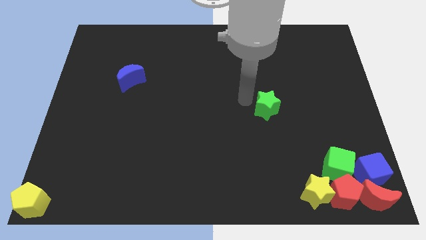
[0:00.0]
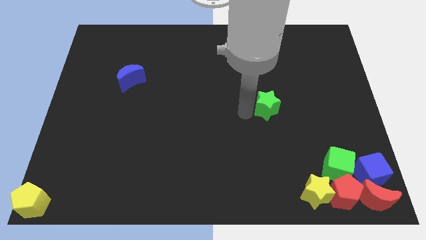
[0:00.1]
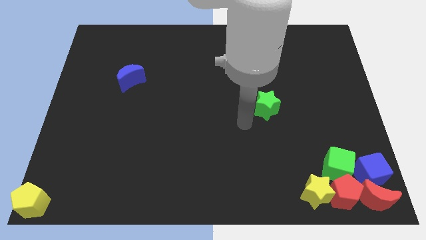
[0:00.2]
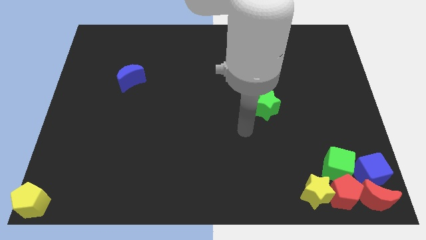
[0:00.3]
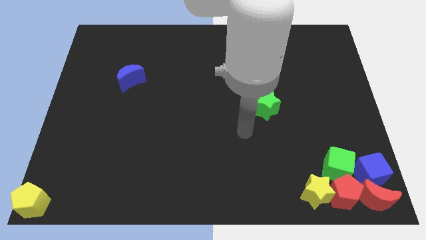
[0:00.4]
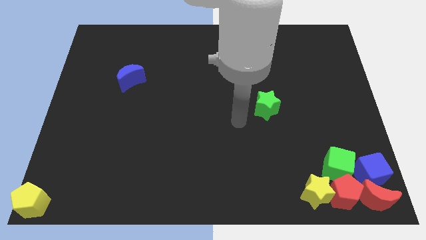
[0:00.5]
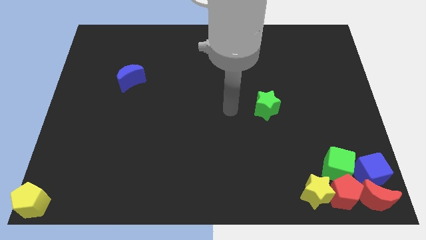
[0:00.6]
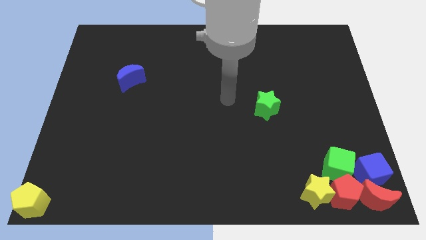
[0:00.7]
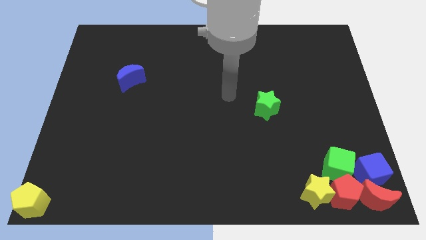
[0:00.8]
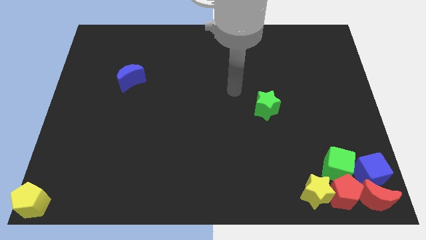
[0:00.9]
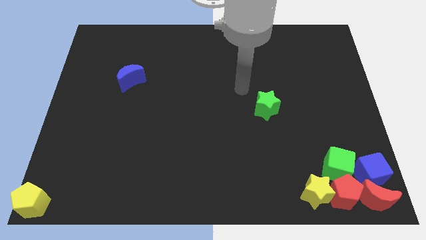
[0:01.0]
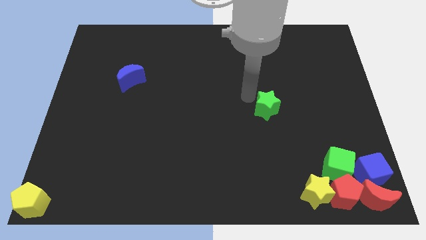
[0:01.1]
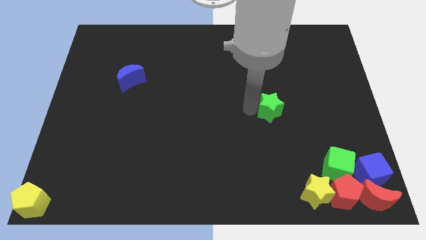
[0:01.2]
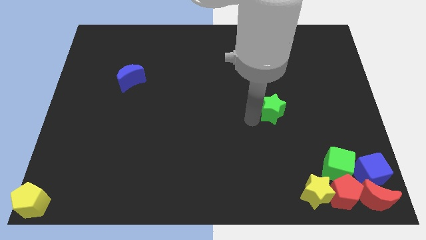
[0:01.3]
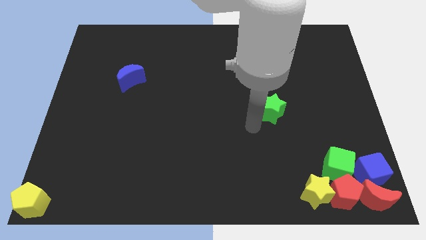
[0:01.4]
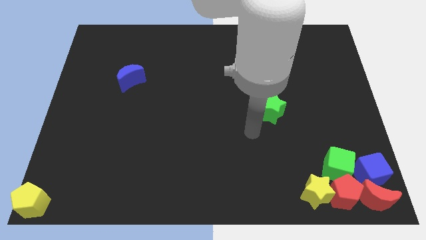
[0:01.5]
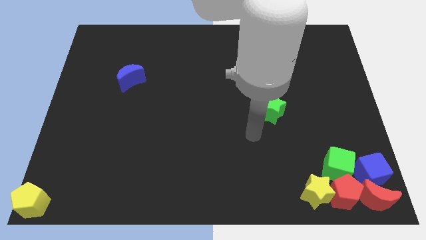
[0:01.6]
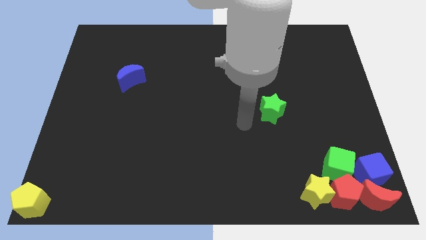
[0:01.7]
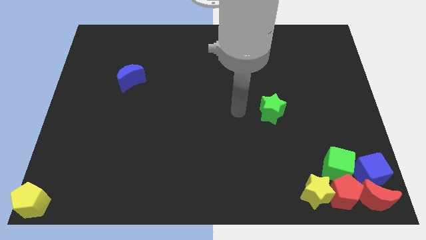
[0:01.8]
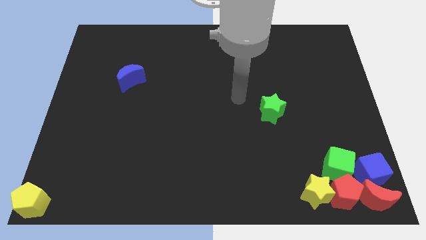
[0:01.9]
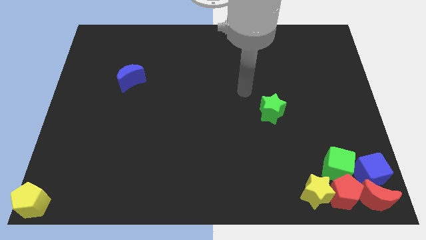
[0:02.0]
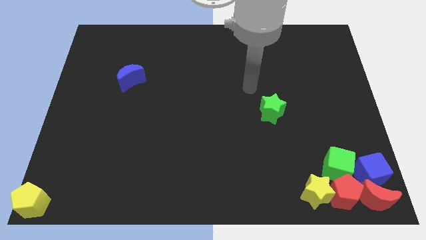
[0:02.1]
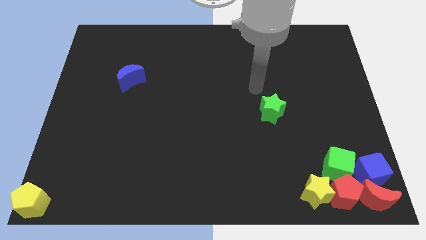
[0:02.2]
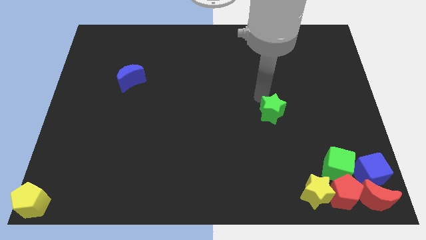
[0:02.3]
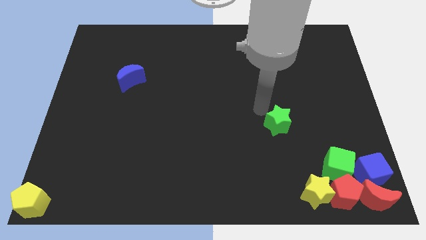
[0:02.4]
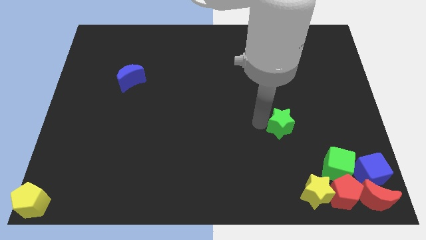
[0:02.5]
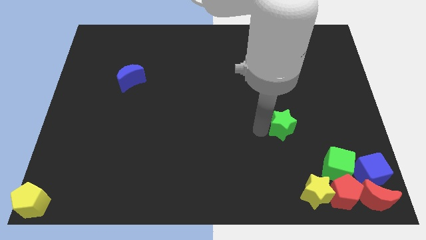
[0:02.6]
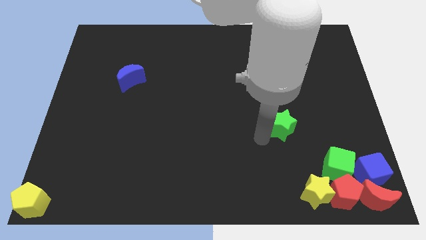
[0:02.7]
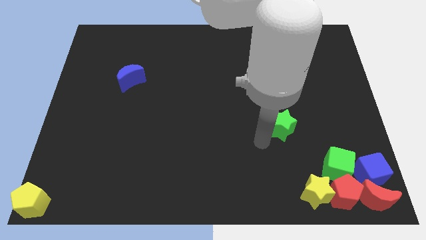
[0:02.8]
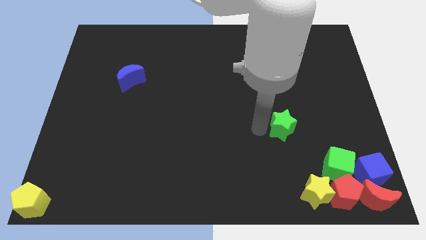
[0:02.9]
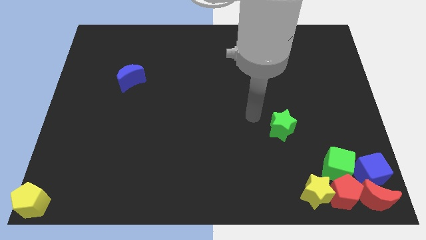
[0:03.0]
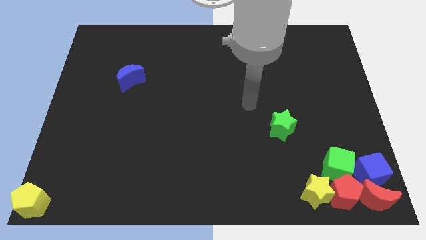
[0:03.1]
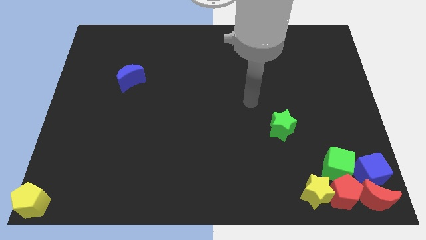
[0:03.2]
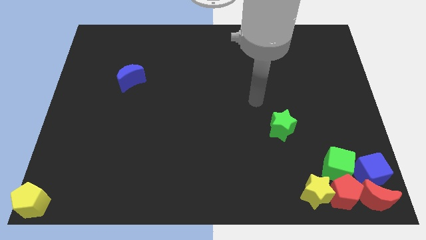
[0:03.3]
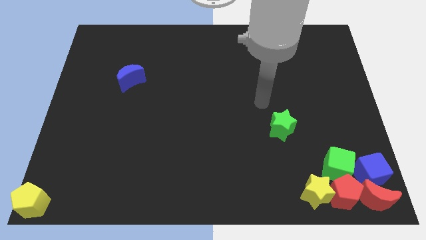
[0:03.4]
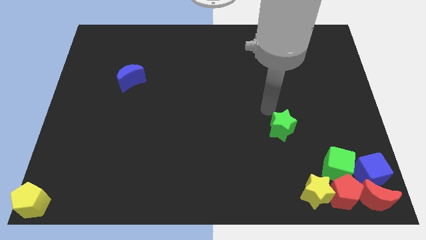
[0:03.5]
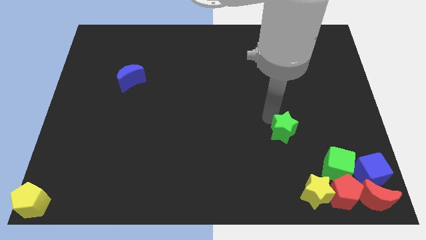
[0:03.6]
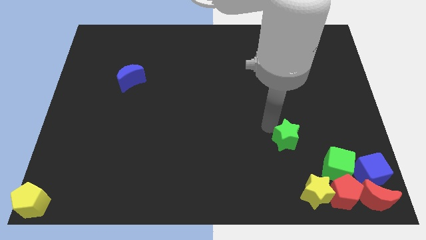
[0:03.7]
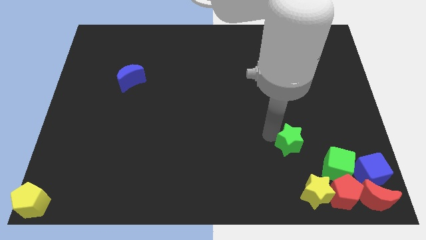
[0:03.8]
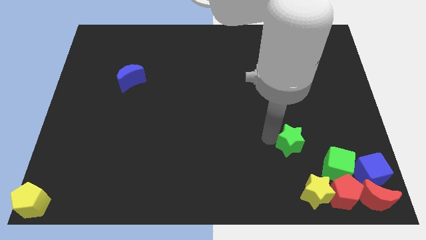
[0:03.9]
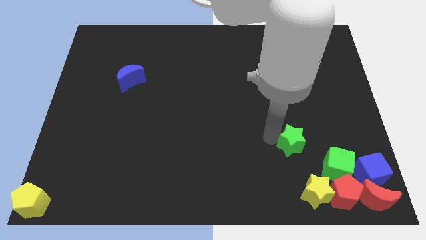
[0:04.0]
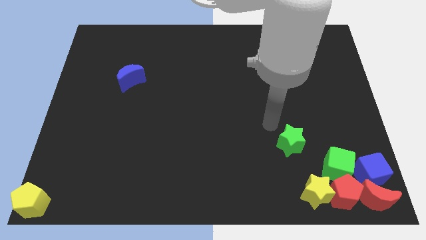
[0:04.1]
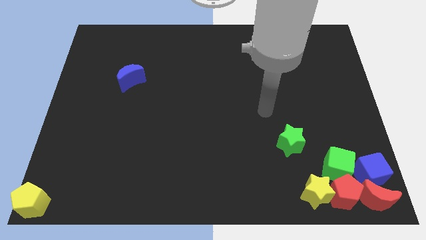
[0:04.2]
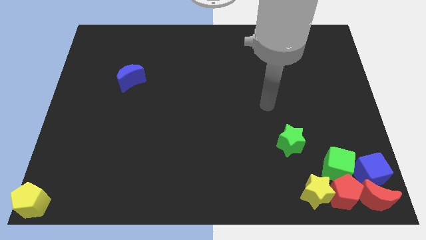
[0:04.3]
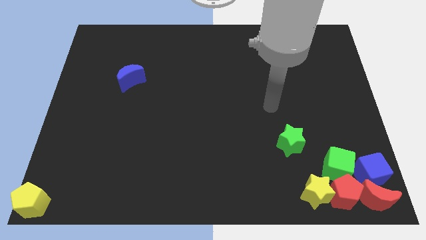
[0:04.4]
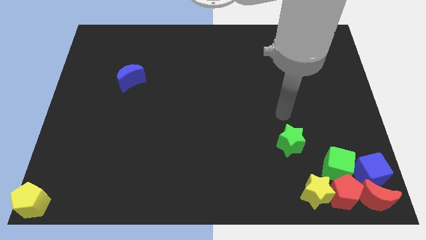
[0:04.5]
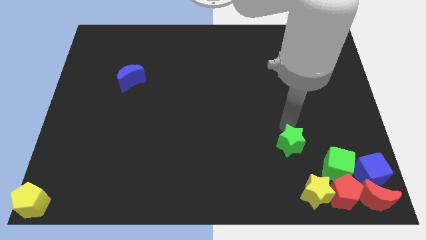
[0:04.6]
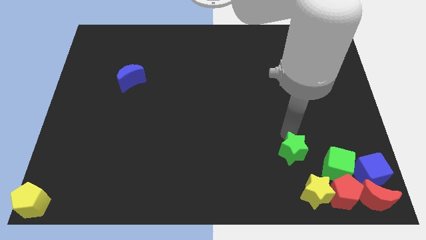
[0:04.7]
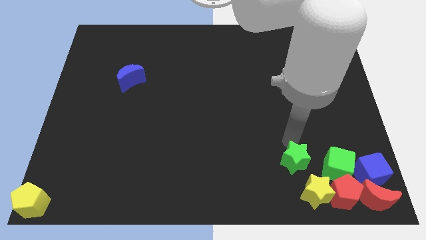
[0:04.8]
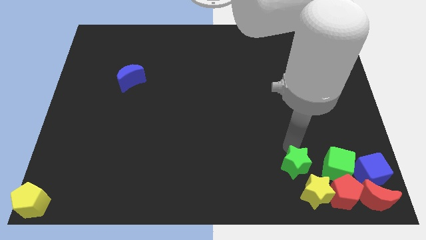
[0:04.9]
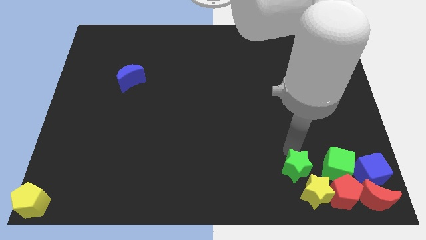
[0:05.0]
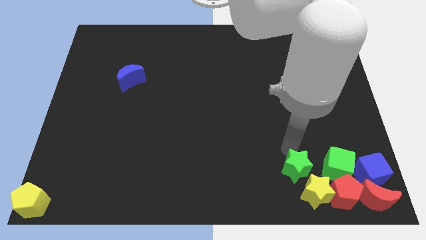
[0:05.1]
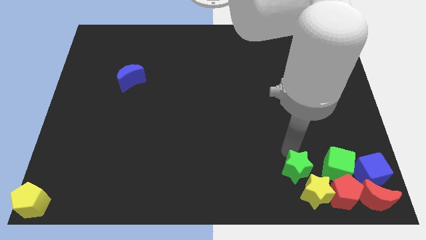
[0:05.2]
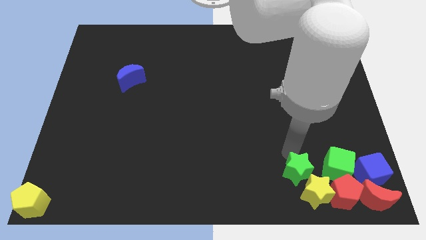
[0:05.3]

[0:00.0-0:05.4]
push green star into group of blocks

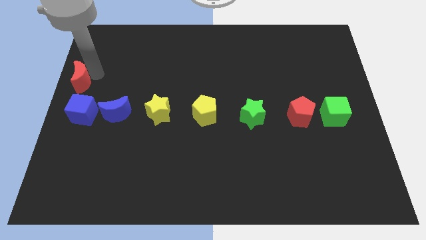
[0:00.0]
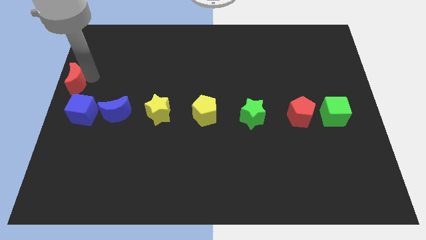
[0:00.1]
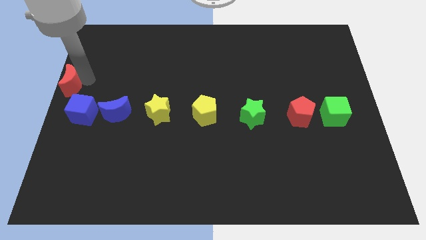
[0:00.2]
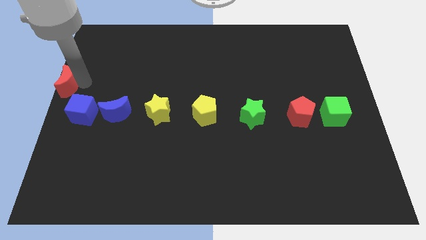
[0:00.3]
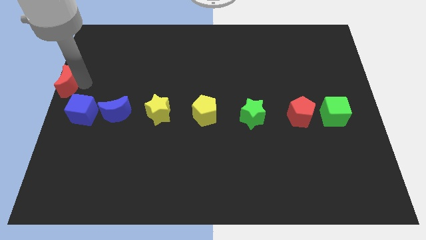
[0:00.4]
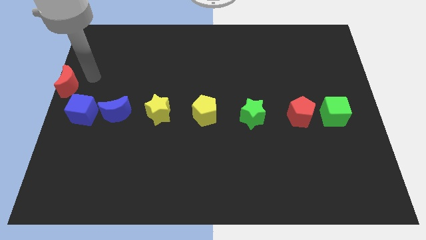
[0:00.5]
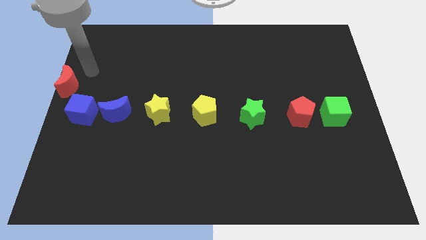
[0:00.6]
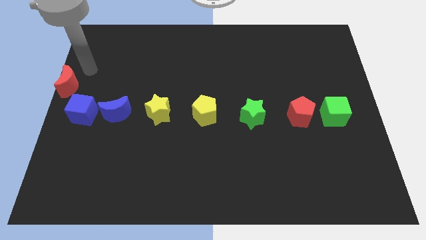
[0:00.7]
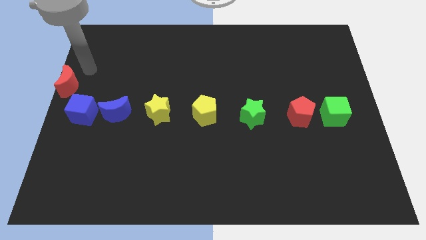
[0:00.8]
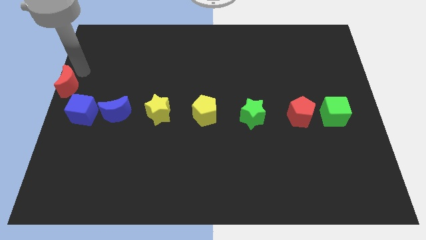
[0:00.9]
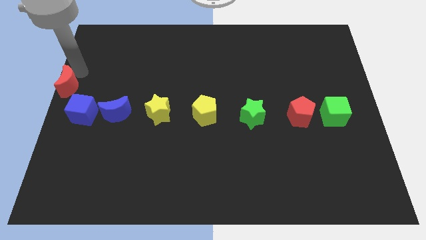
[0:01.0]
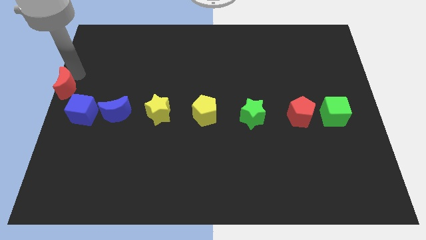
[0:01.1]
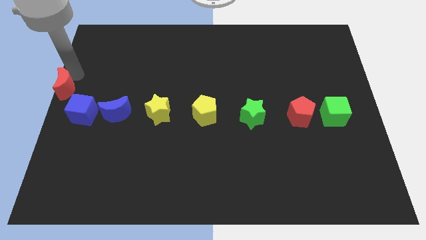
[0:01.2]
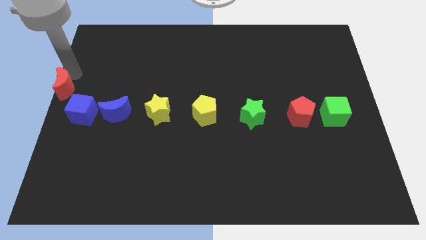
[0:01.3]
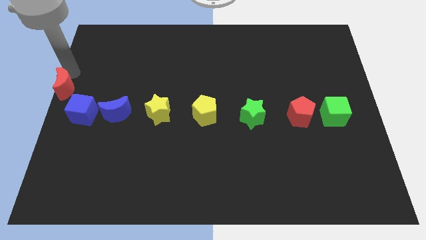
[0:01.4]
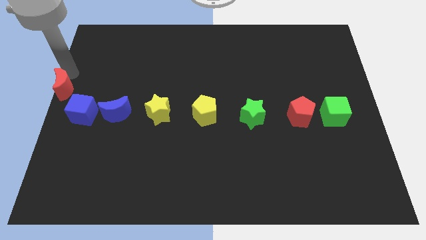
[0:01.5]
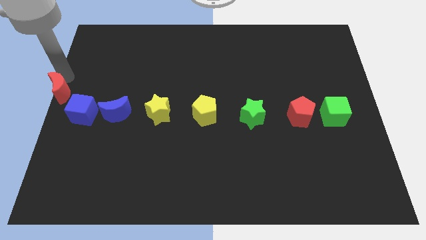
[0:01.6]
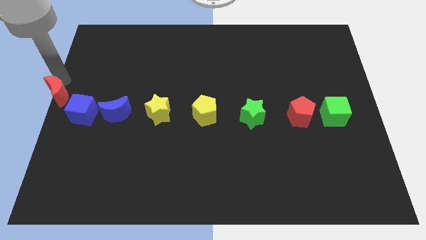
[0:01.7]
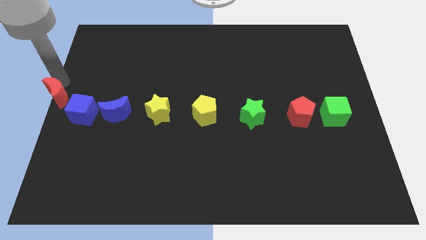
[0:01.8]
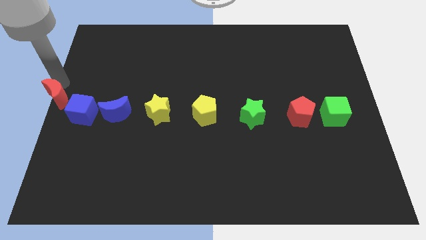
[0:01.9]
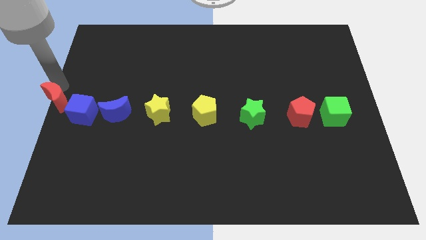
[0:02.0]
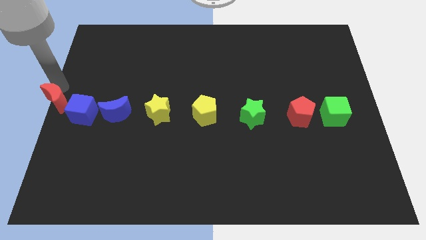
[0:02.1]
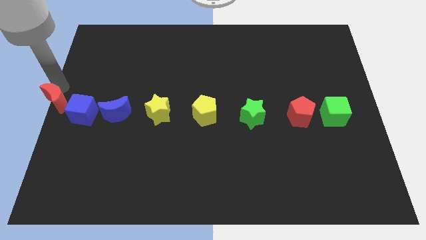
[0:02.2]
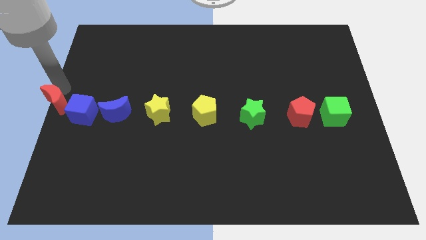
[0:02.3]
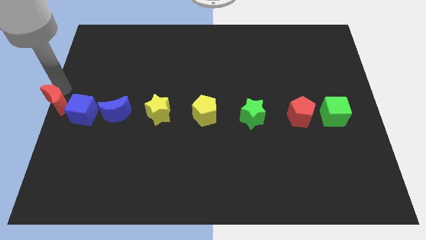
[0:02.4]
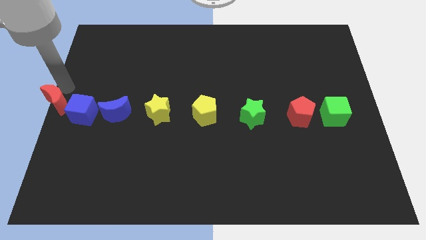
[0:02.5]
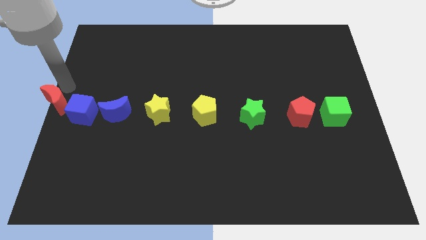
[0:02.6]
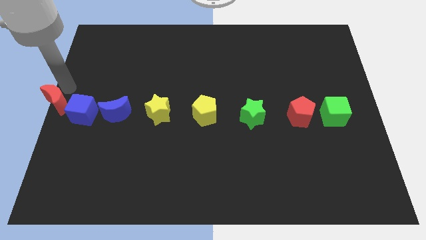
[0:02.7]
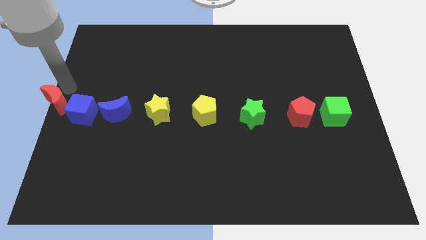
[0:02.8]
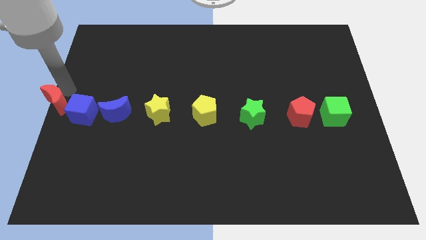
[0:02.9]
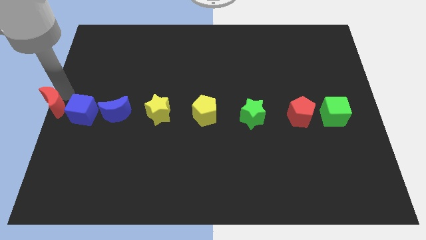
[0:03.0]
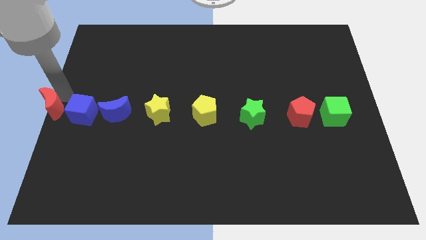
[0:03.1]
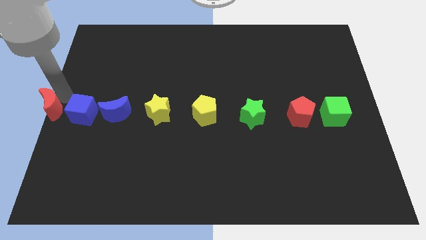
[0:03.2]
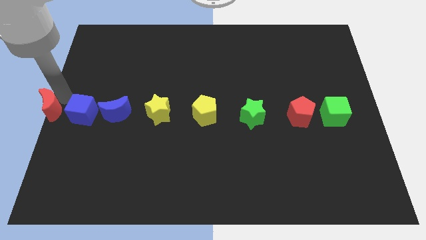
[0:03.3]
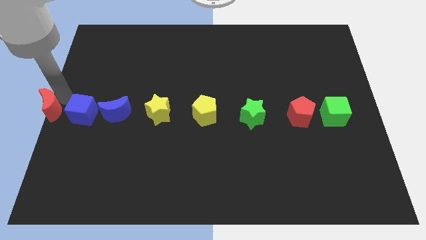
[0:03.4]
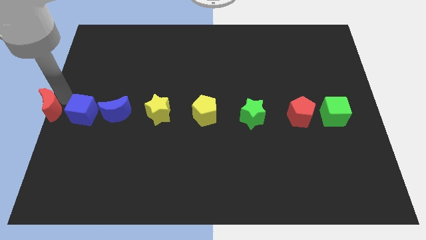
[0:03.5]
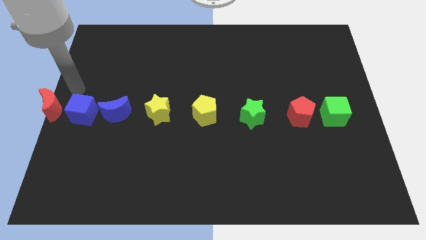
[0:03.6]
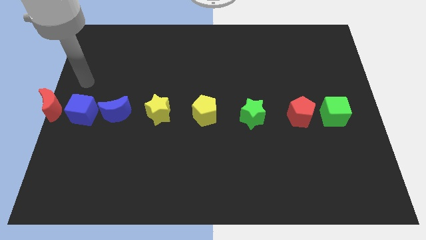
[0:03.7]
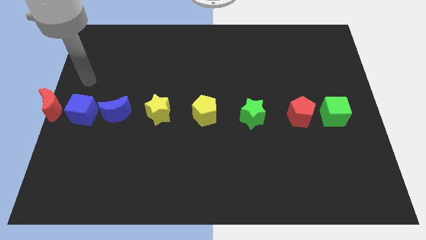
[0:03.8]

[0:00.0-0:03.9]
place the red moon at the left side of the blue cube
